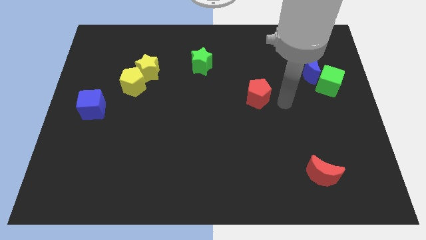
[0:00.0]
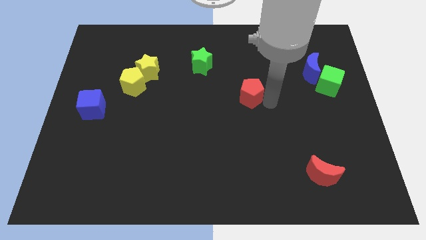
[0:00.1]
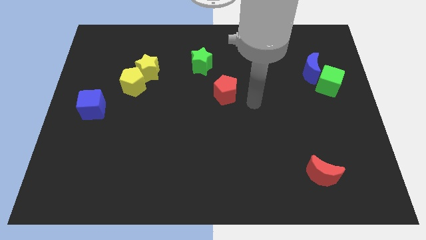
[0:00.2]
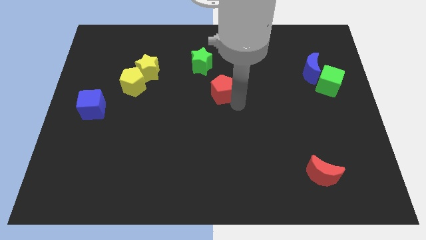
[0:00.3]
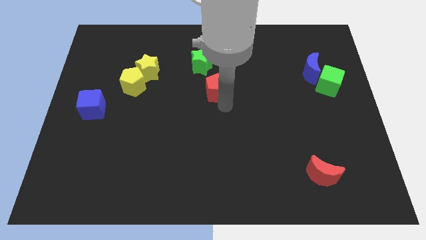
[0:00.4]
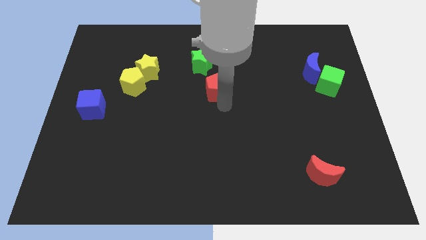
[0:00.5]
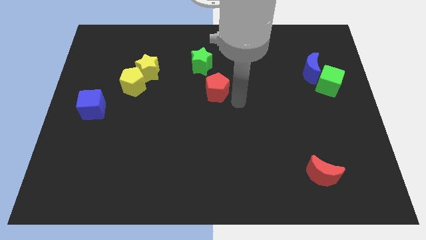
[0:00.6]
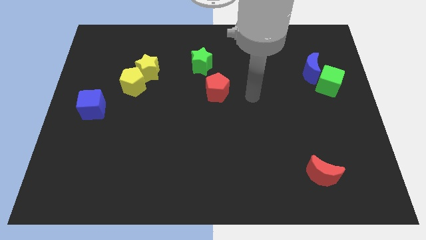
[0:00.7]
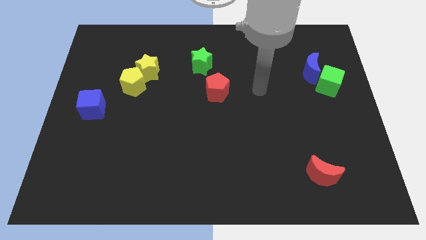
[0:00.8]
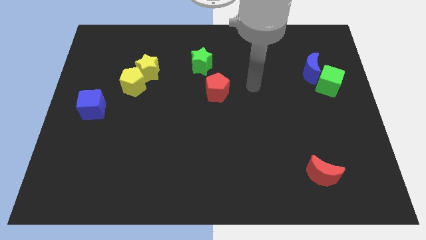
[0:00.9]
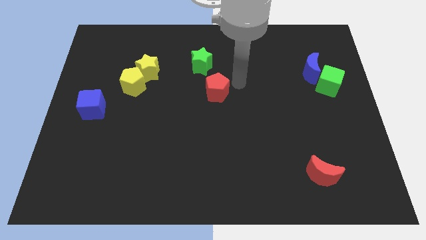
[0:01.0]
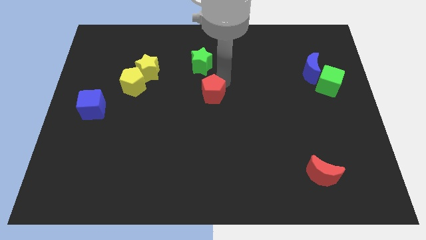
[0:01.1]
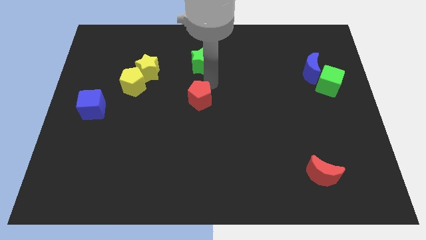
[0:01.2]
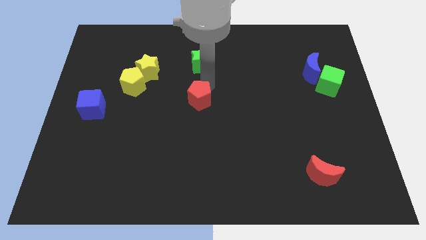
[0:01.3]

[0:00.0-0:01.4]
put the red pentagon below the green star

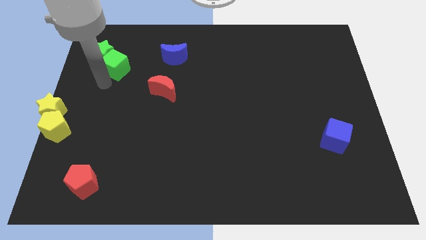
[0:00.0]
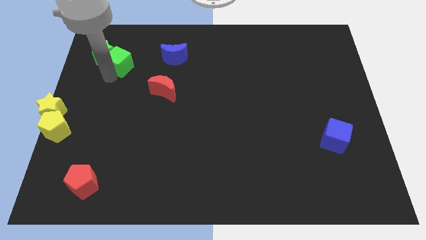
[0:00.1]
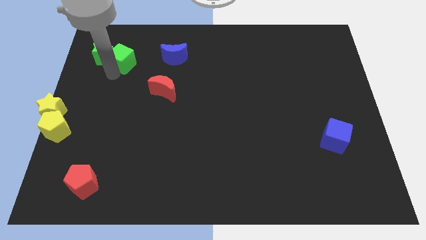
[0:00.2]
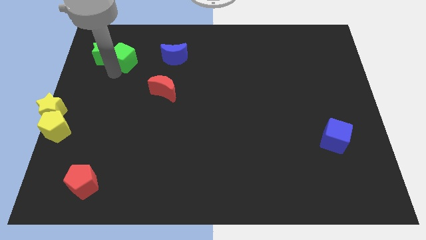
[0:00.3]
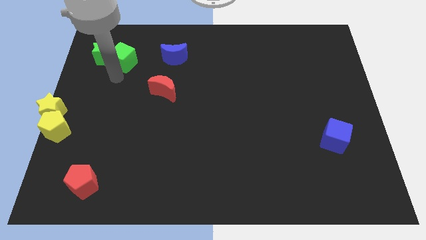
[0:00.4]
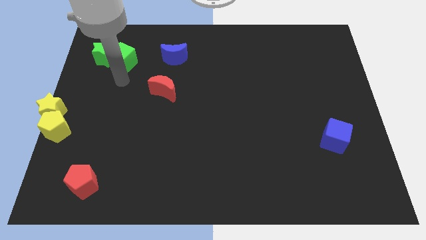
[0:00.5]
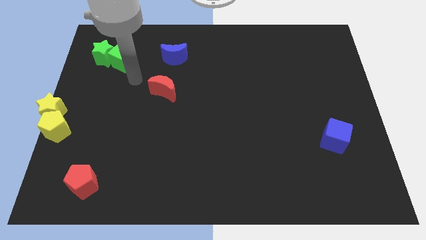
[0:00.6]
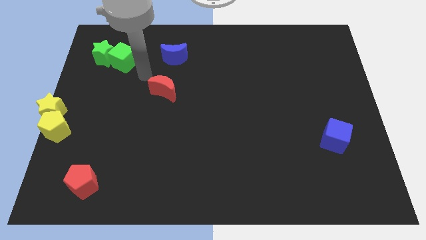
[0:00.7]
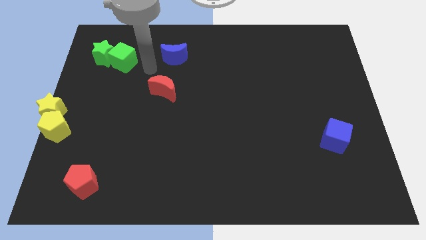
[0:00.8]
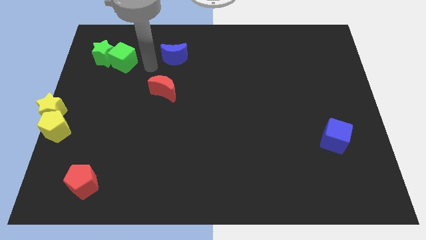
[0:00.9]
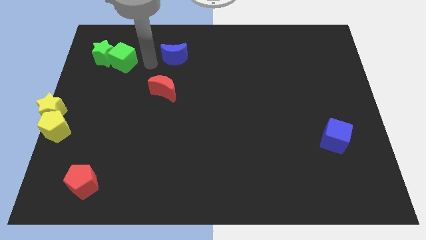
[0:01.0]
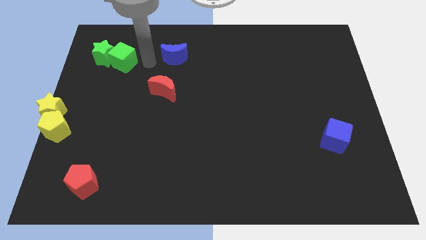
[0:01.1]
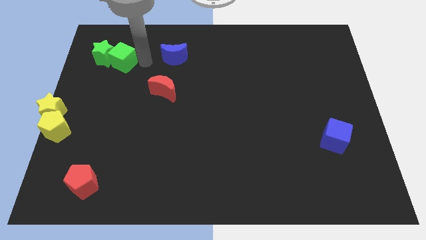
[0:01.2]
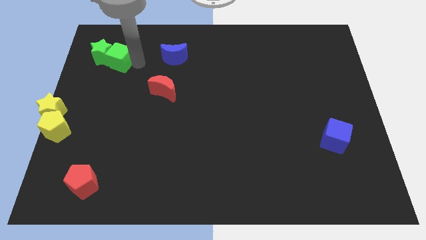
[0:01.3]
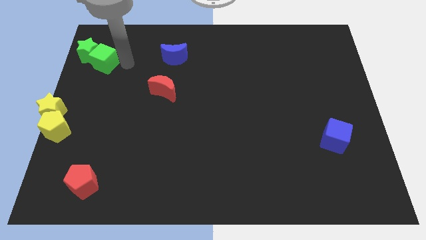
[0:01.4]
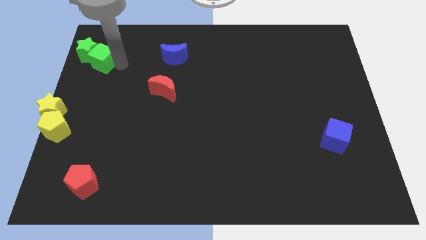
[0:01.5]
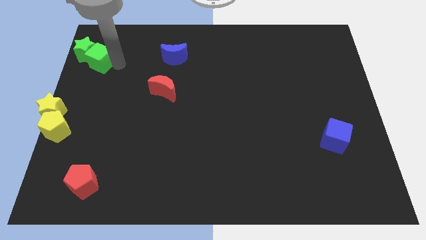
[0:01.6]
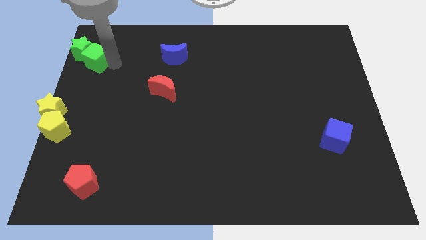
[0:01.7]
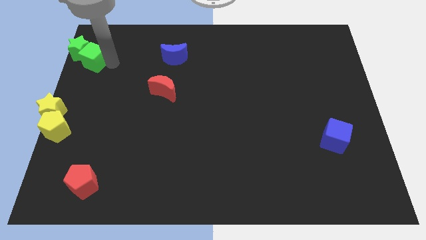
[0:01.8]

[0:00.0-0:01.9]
place the green blocks to the left of the board

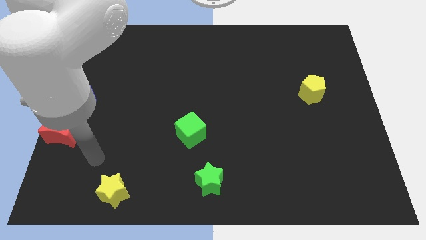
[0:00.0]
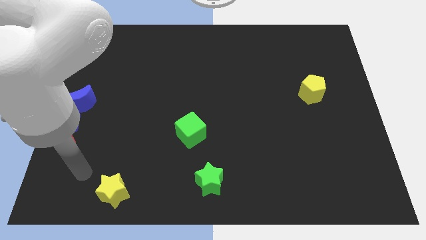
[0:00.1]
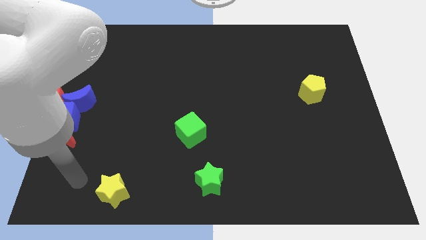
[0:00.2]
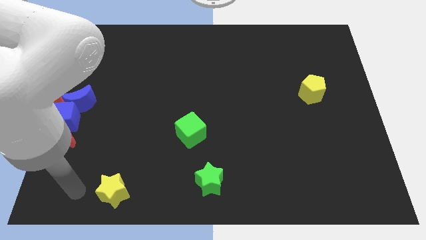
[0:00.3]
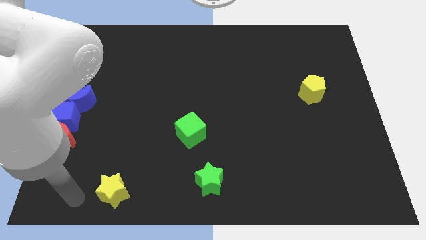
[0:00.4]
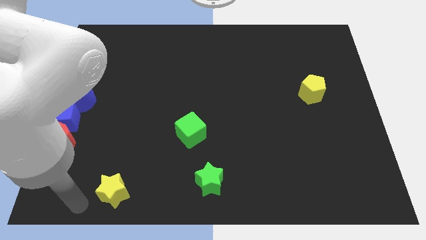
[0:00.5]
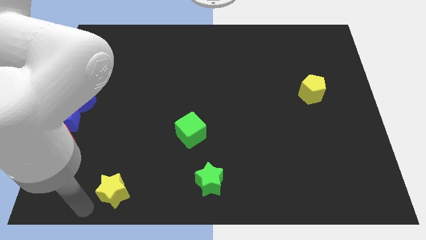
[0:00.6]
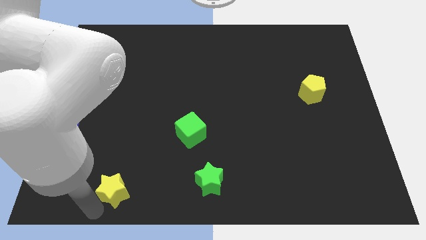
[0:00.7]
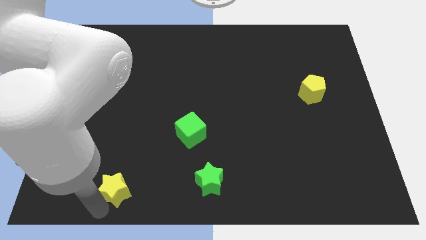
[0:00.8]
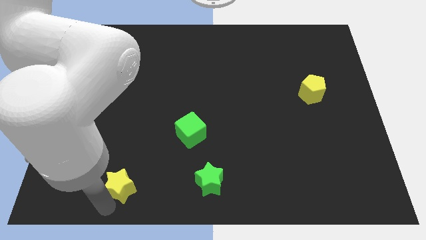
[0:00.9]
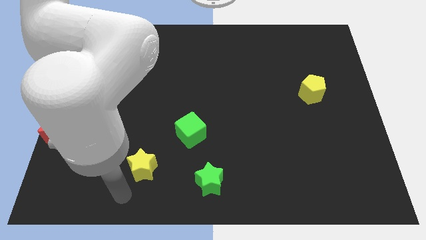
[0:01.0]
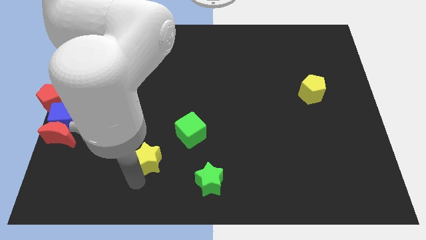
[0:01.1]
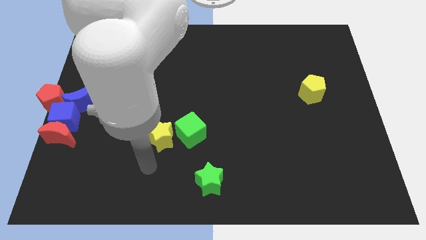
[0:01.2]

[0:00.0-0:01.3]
move yellow star left beside the green cube

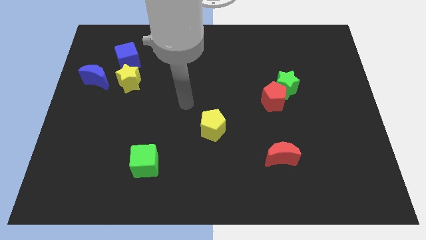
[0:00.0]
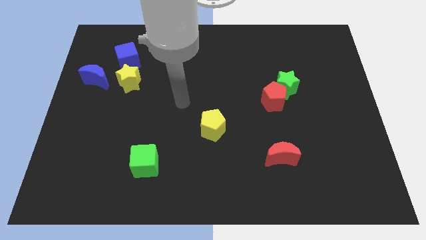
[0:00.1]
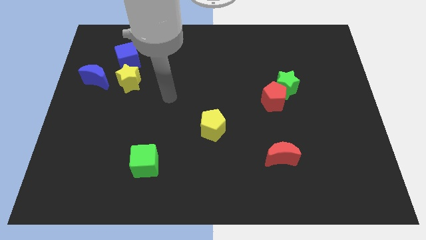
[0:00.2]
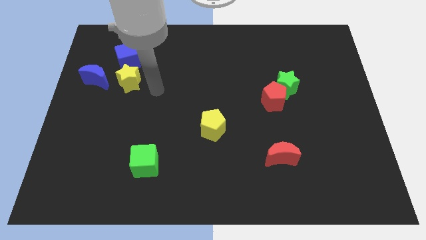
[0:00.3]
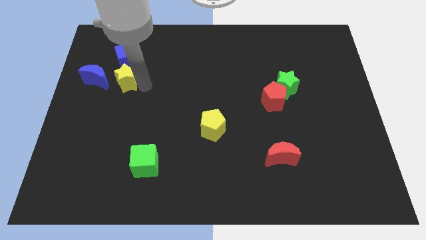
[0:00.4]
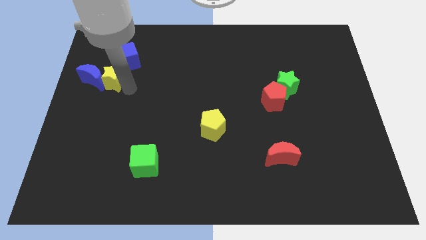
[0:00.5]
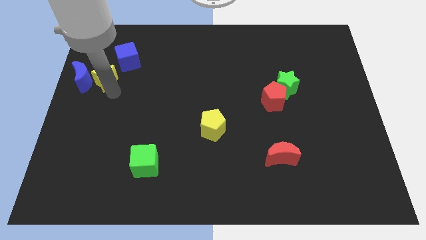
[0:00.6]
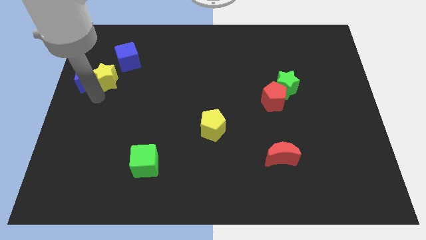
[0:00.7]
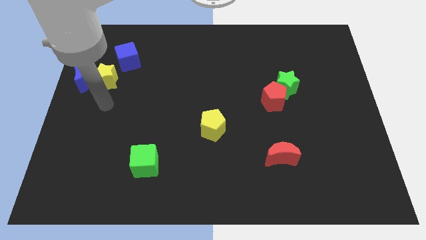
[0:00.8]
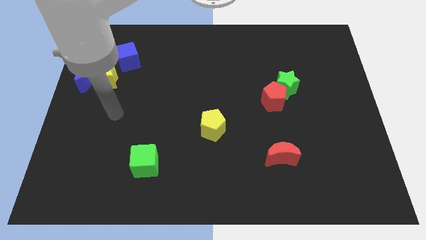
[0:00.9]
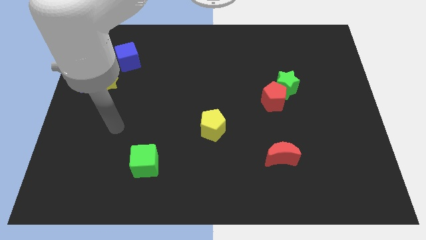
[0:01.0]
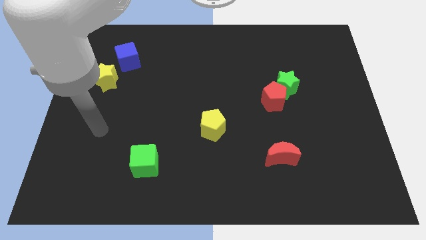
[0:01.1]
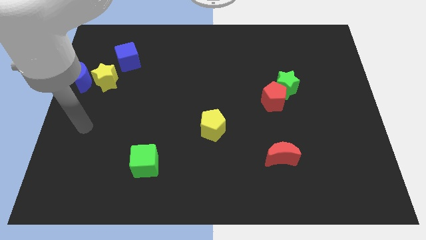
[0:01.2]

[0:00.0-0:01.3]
push blue crescent into yellow star

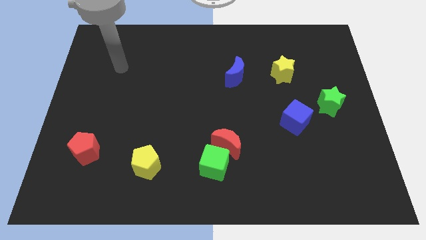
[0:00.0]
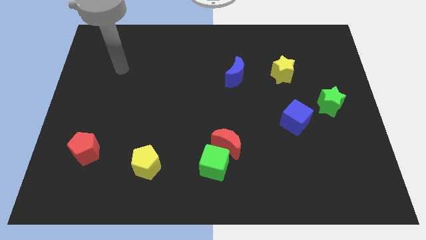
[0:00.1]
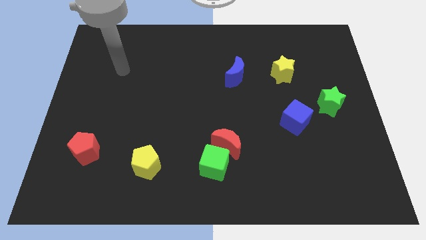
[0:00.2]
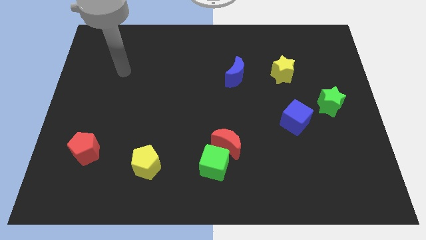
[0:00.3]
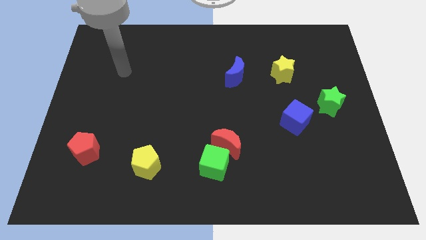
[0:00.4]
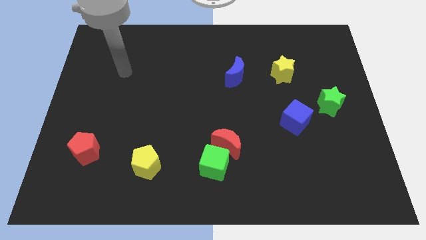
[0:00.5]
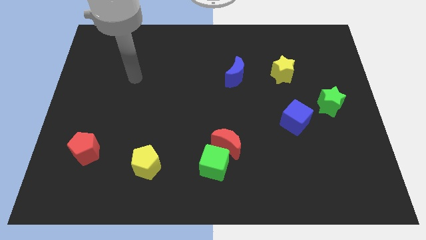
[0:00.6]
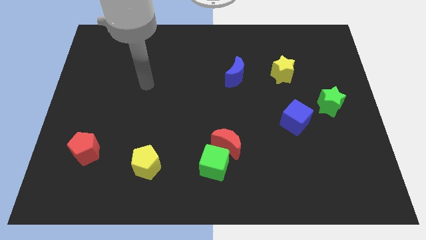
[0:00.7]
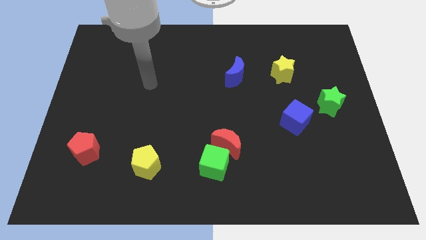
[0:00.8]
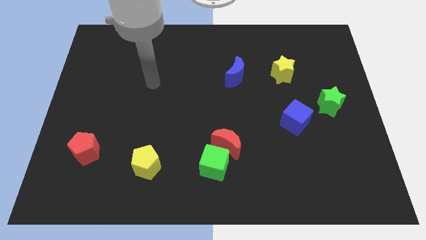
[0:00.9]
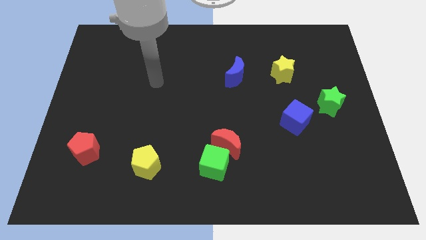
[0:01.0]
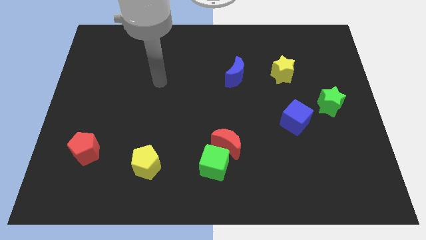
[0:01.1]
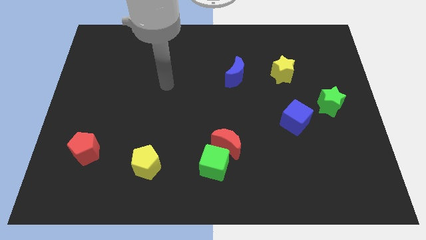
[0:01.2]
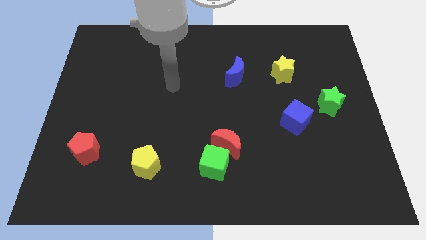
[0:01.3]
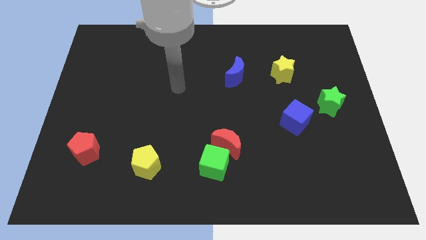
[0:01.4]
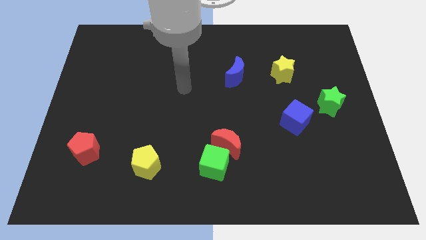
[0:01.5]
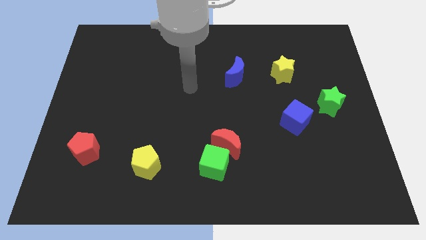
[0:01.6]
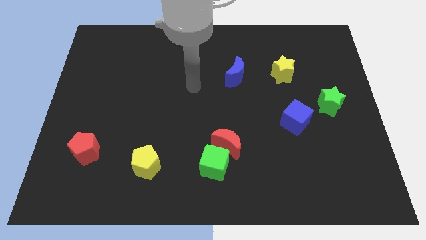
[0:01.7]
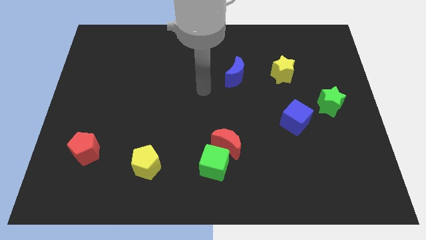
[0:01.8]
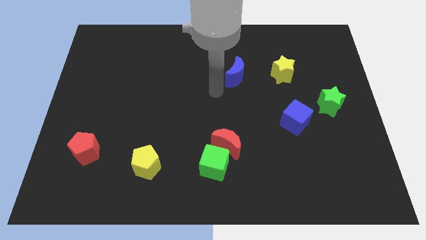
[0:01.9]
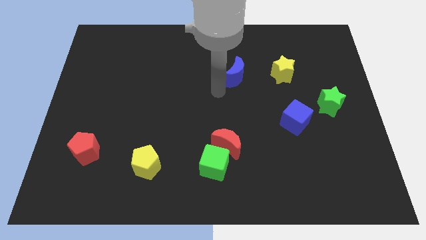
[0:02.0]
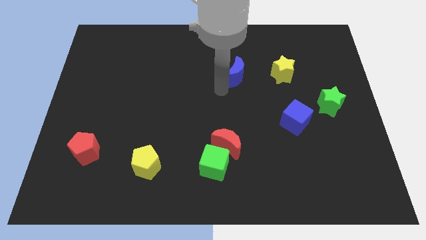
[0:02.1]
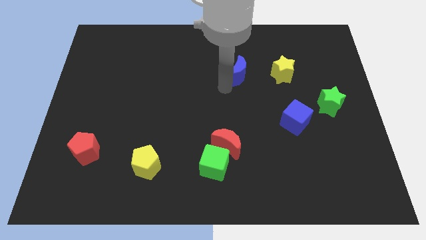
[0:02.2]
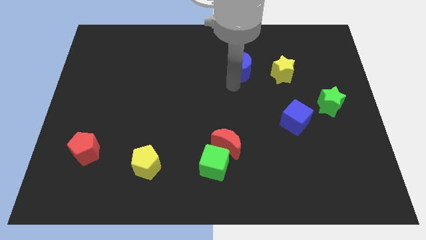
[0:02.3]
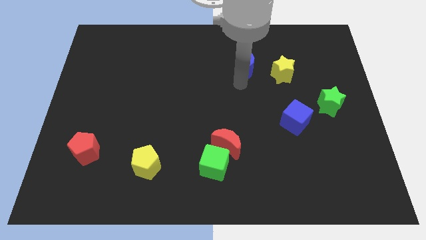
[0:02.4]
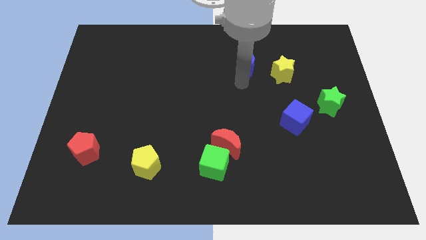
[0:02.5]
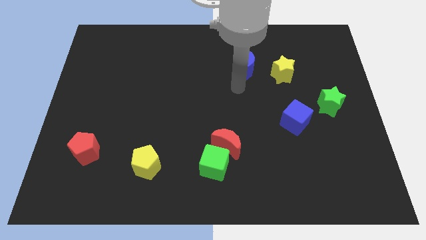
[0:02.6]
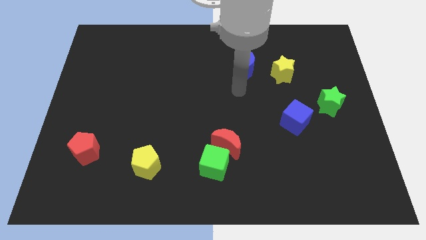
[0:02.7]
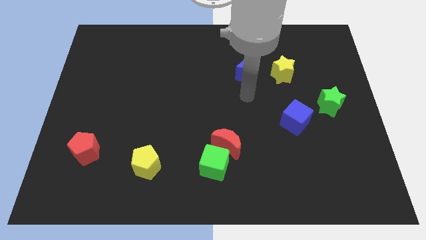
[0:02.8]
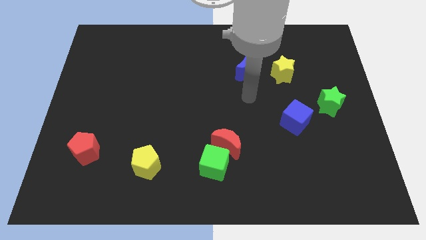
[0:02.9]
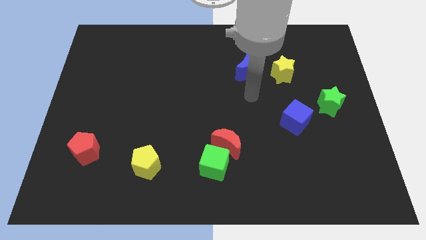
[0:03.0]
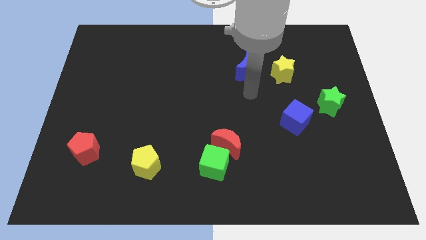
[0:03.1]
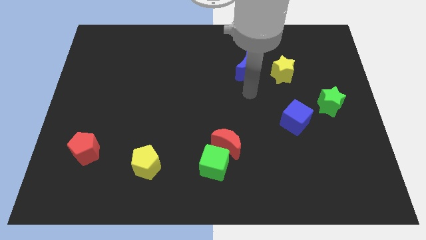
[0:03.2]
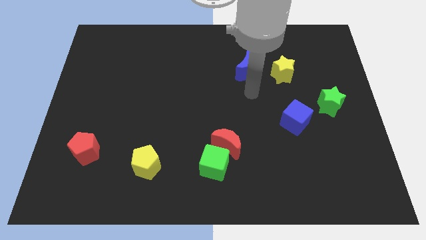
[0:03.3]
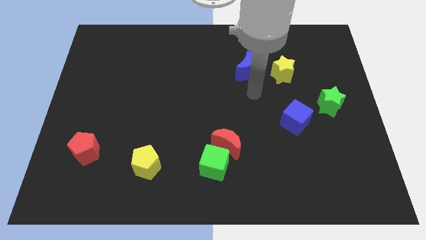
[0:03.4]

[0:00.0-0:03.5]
move your arm to the blue moon
